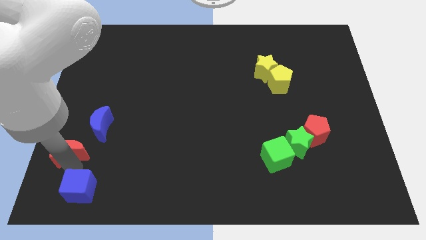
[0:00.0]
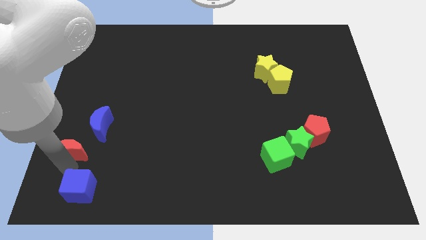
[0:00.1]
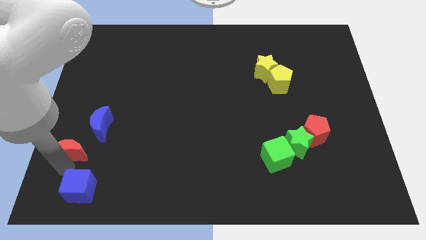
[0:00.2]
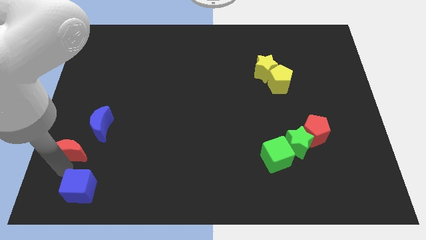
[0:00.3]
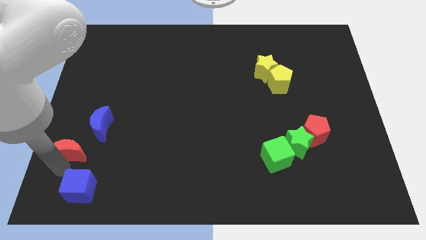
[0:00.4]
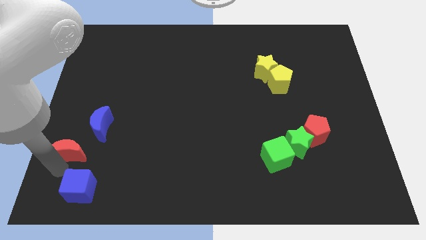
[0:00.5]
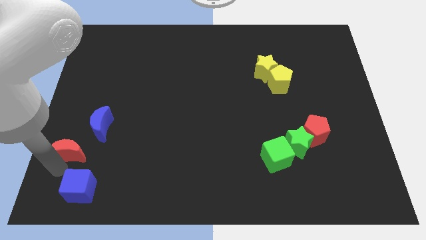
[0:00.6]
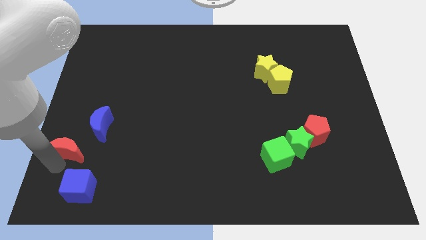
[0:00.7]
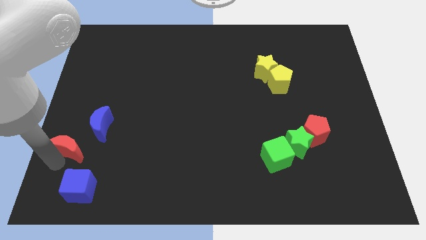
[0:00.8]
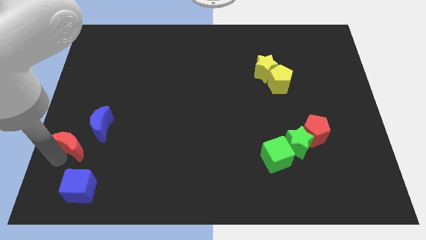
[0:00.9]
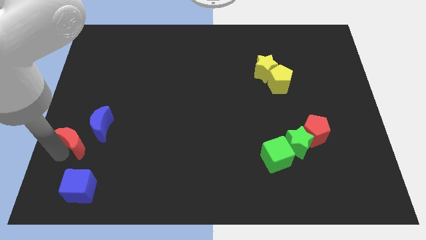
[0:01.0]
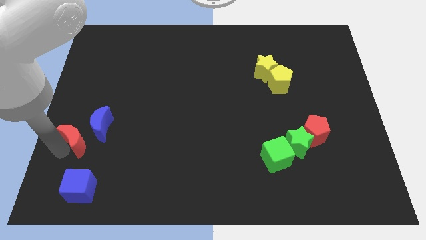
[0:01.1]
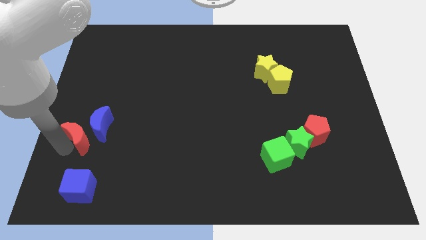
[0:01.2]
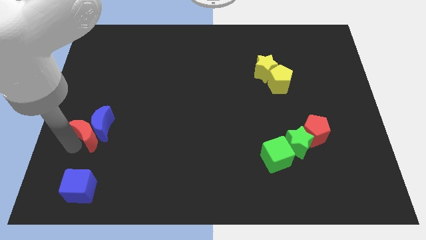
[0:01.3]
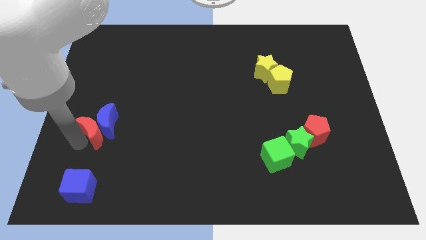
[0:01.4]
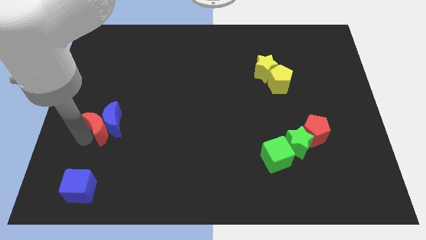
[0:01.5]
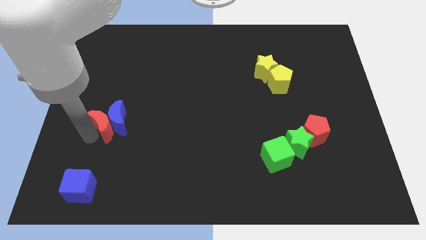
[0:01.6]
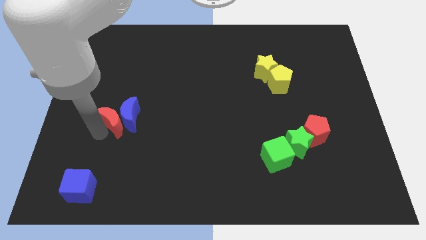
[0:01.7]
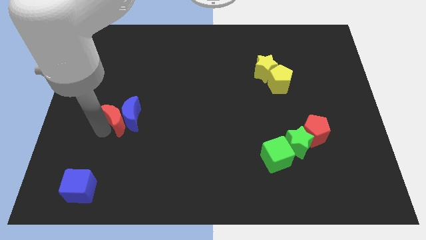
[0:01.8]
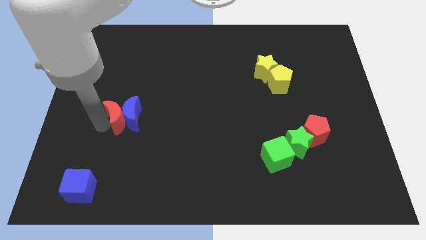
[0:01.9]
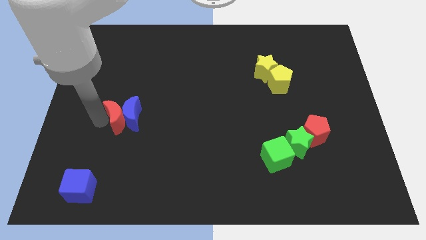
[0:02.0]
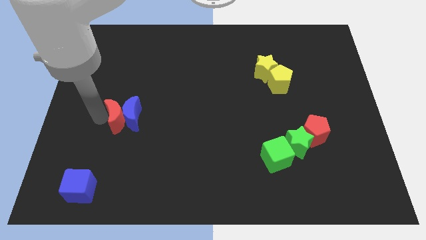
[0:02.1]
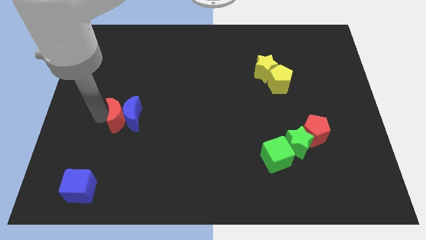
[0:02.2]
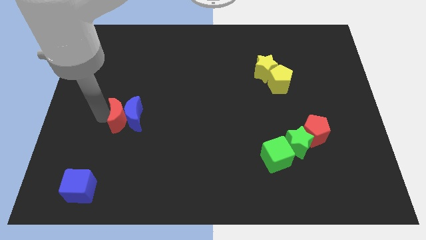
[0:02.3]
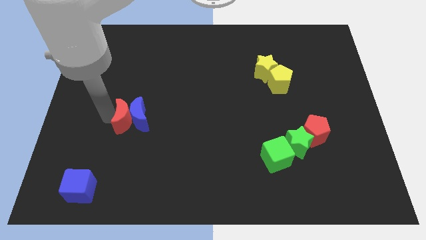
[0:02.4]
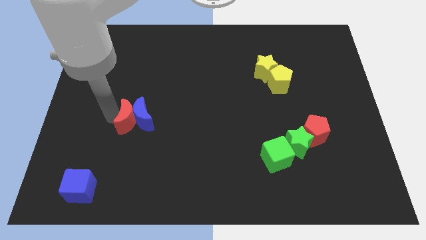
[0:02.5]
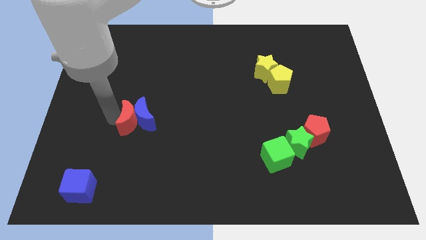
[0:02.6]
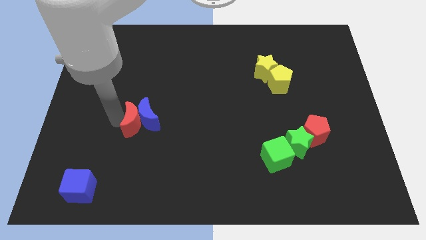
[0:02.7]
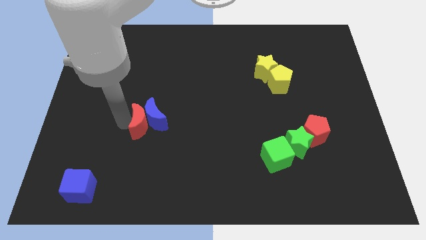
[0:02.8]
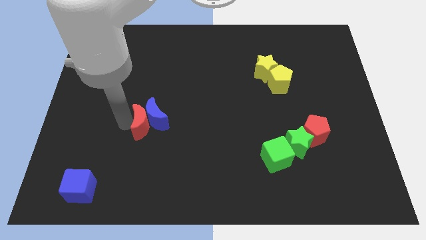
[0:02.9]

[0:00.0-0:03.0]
separate the red moon away from blue cube

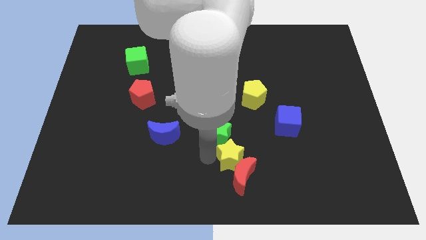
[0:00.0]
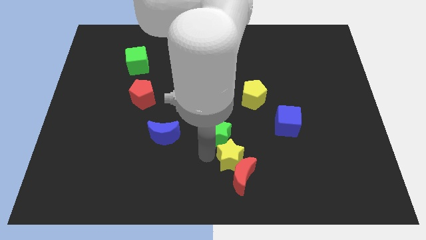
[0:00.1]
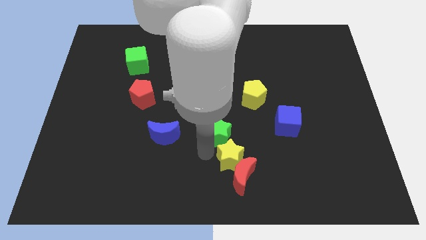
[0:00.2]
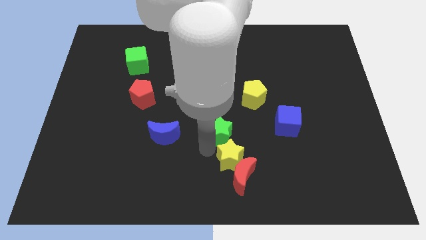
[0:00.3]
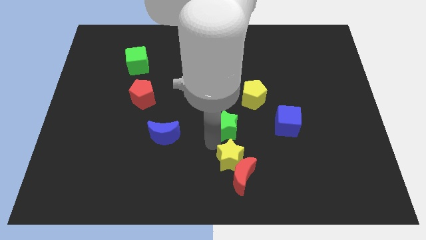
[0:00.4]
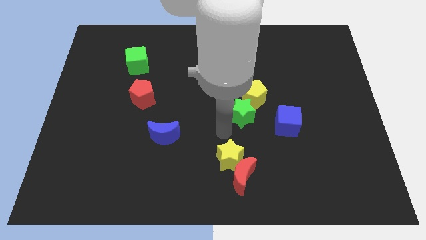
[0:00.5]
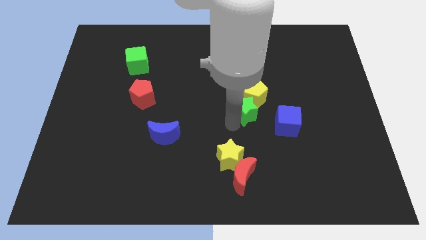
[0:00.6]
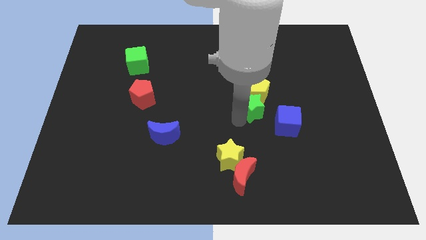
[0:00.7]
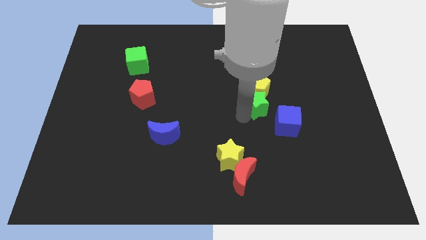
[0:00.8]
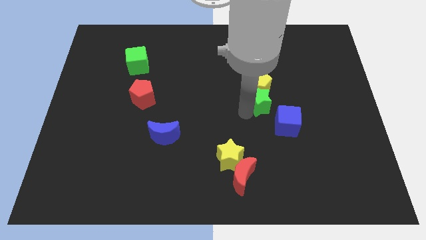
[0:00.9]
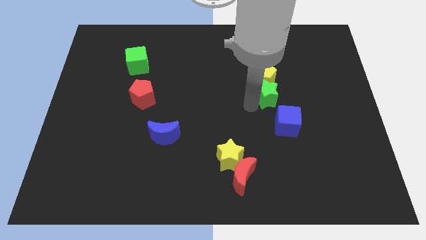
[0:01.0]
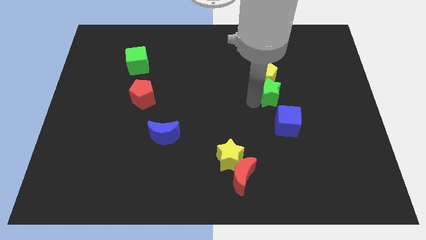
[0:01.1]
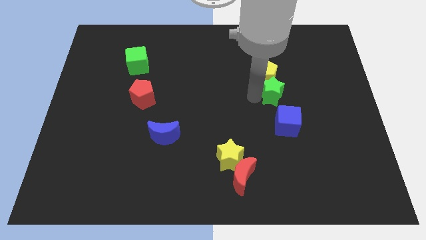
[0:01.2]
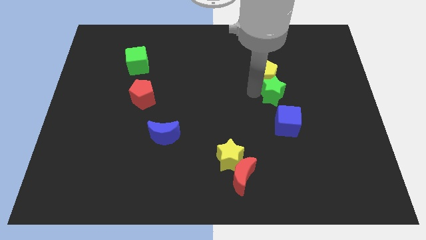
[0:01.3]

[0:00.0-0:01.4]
drag the green star and yellow pentagon to the top left side of the blue cube

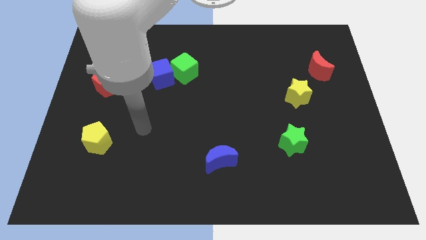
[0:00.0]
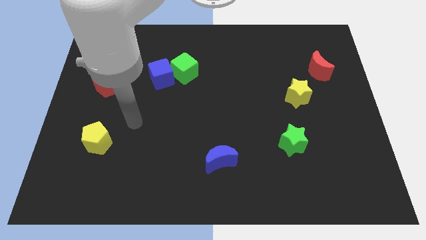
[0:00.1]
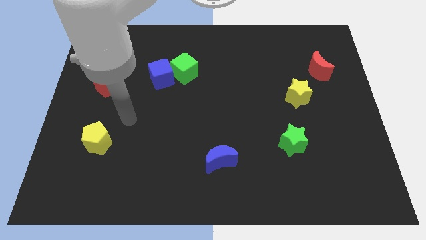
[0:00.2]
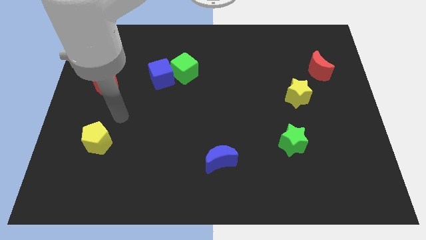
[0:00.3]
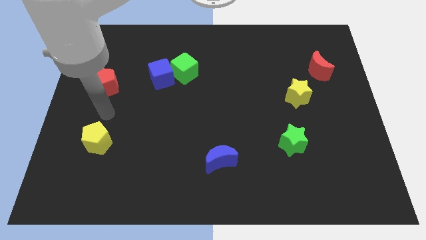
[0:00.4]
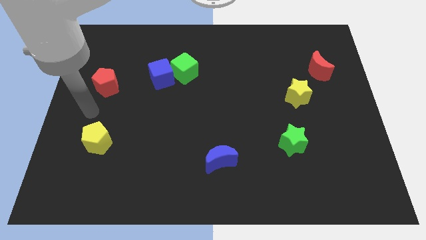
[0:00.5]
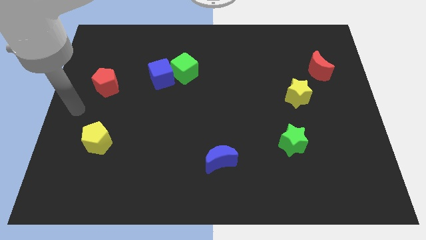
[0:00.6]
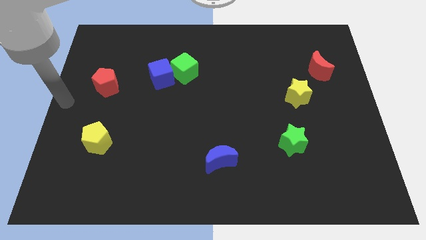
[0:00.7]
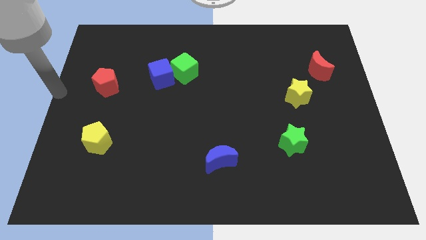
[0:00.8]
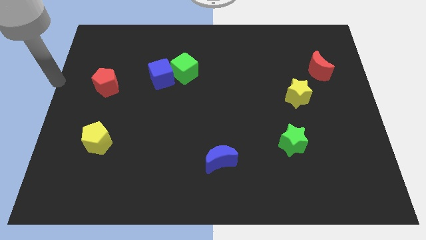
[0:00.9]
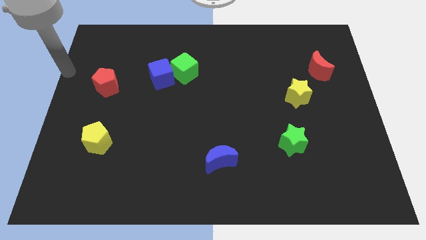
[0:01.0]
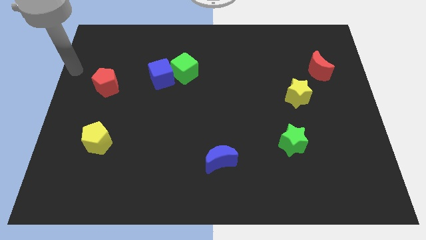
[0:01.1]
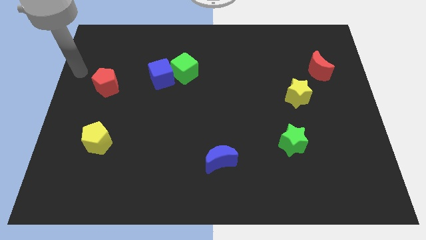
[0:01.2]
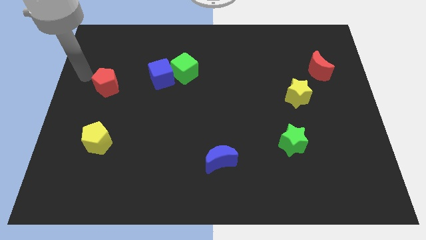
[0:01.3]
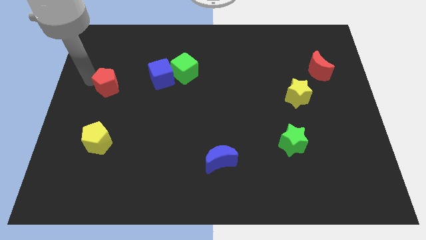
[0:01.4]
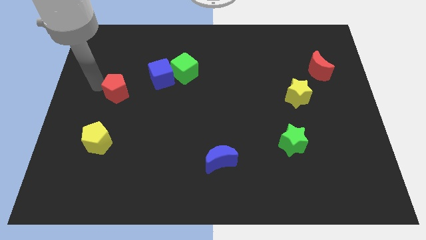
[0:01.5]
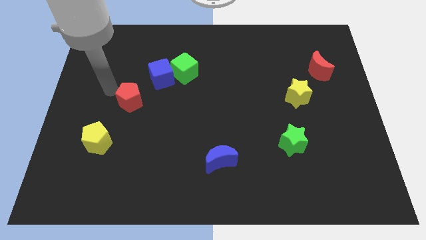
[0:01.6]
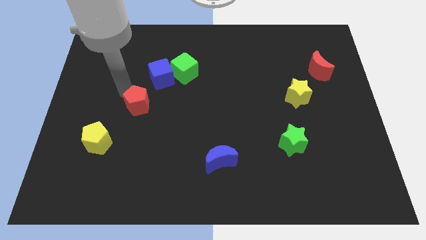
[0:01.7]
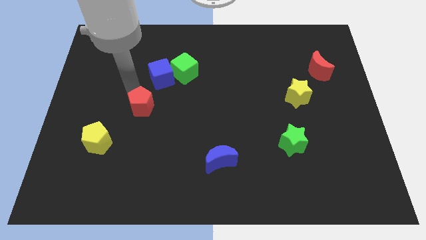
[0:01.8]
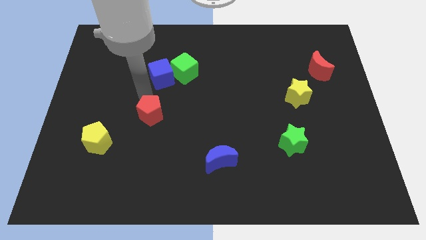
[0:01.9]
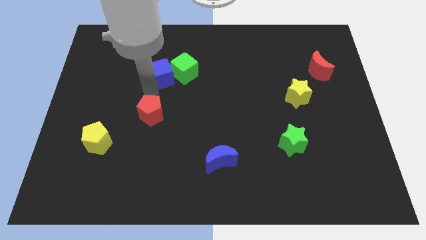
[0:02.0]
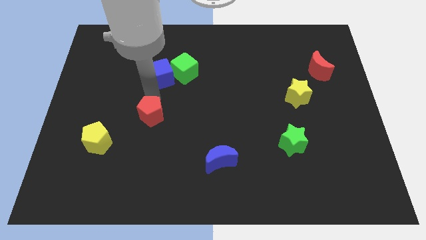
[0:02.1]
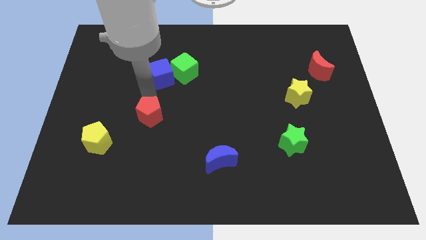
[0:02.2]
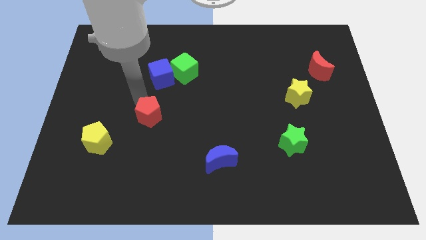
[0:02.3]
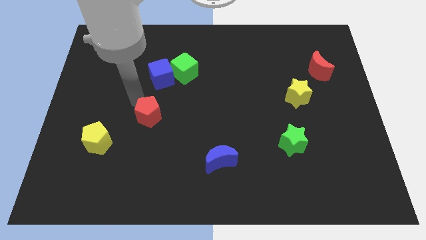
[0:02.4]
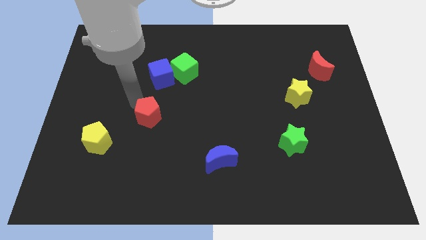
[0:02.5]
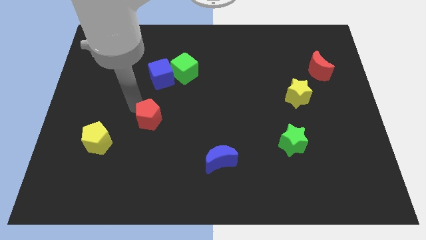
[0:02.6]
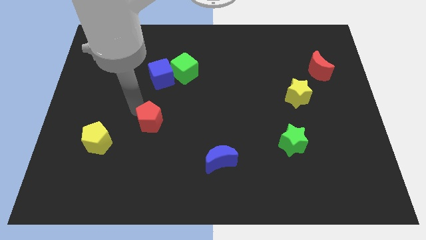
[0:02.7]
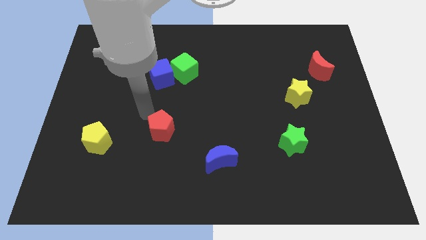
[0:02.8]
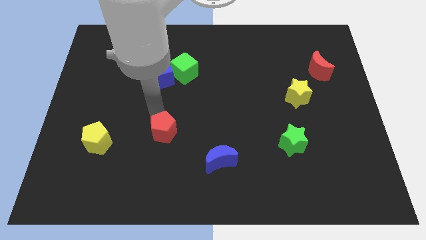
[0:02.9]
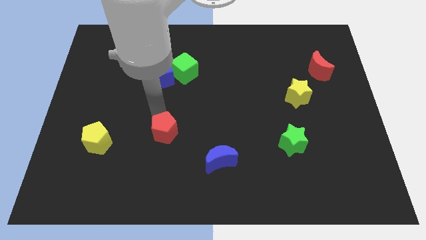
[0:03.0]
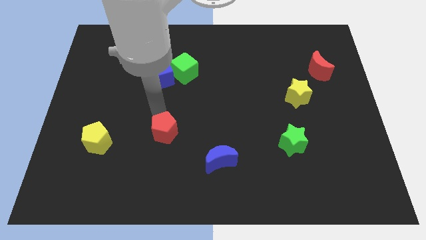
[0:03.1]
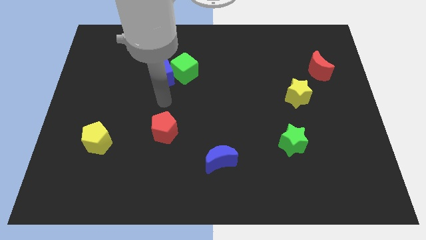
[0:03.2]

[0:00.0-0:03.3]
move the red pentagon towards the bottom centre of the board

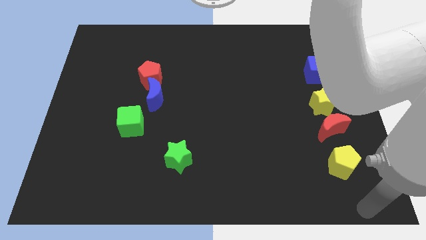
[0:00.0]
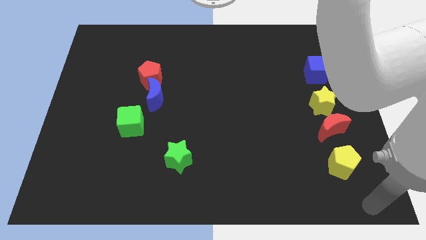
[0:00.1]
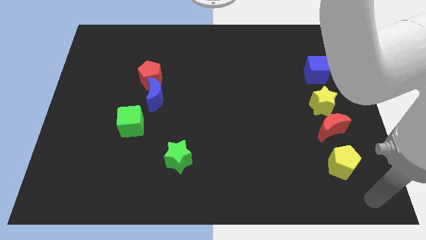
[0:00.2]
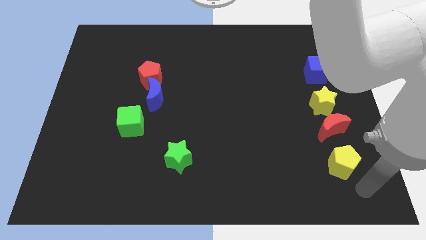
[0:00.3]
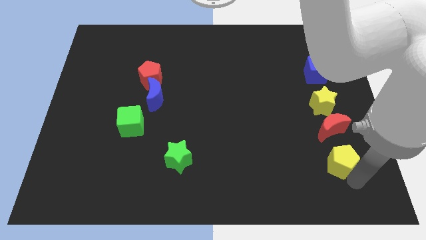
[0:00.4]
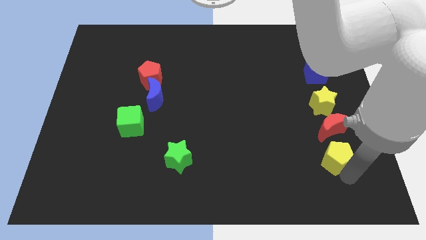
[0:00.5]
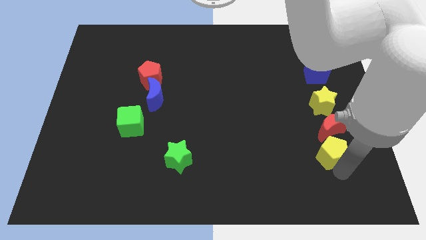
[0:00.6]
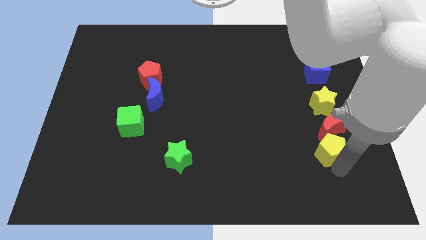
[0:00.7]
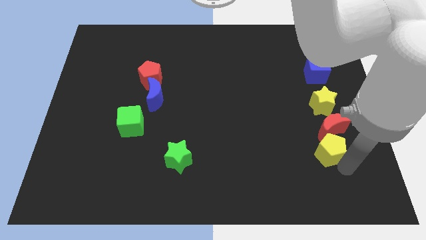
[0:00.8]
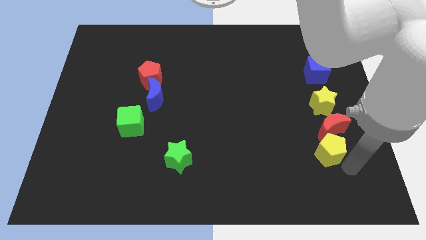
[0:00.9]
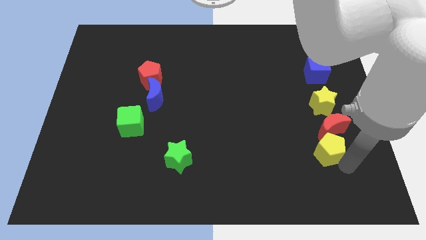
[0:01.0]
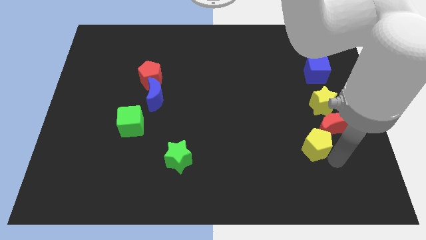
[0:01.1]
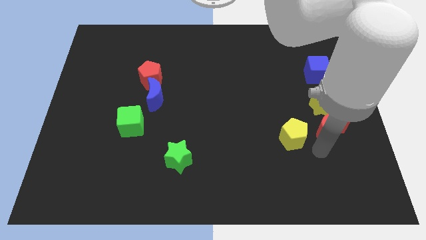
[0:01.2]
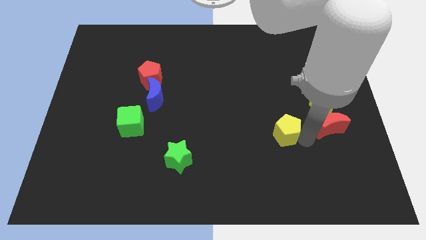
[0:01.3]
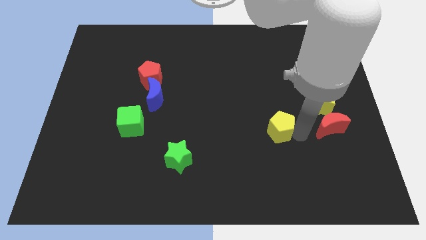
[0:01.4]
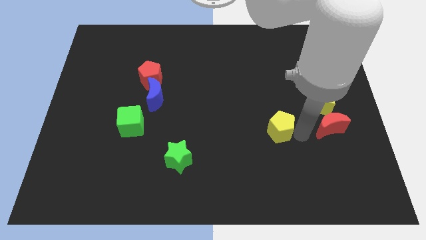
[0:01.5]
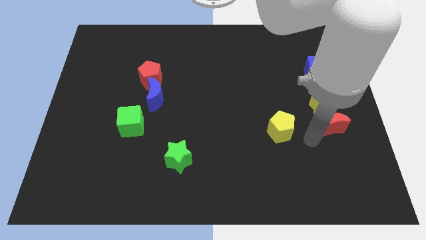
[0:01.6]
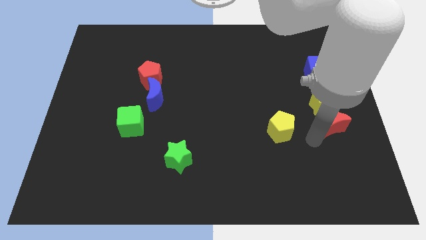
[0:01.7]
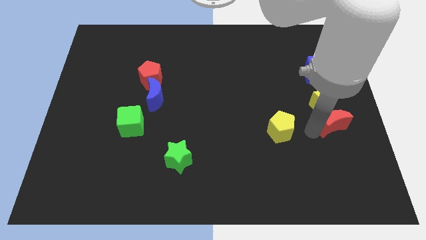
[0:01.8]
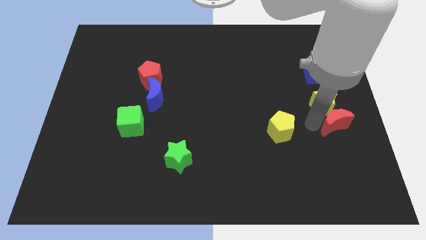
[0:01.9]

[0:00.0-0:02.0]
place the yellow pentagon to the left of the red moon
